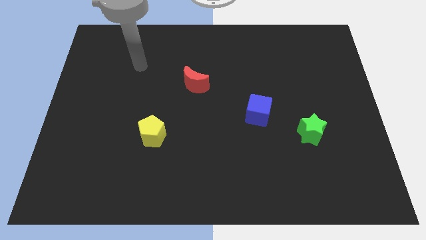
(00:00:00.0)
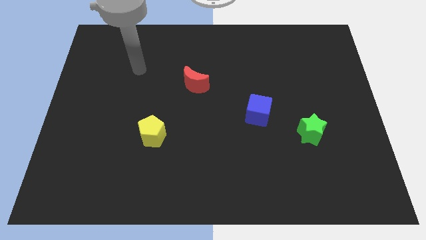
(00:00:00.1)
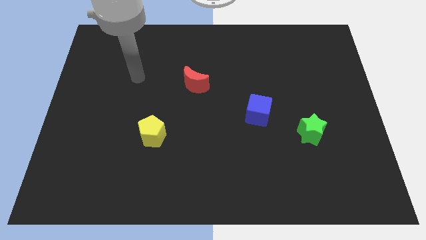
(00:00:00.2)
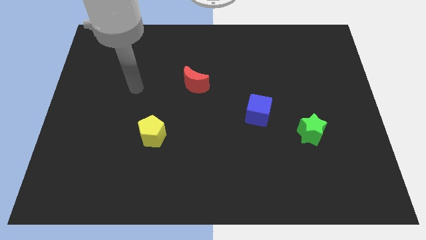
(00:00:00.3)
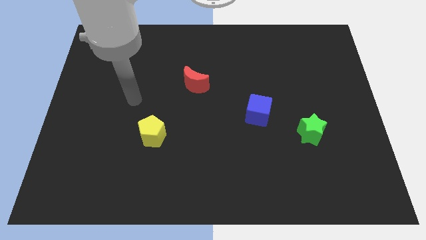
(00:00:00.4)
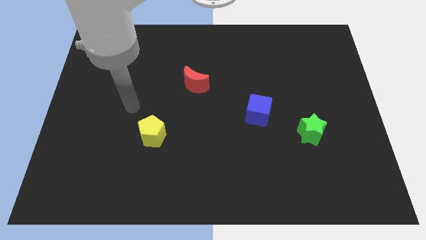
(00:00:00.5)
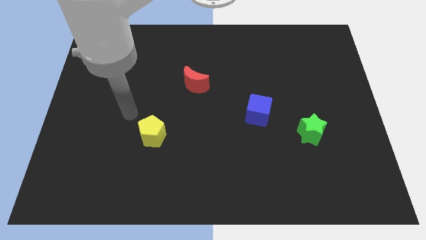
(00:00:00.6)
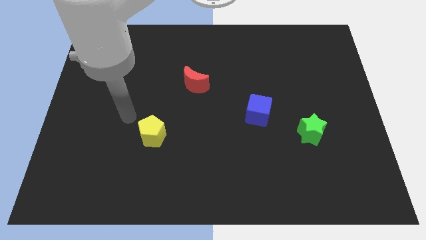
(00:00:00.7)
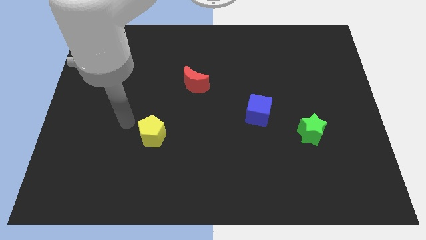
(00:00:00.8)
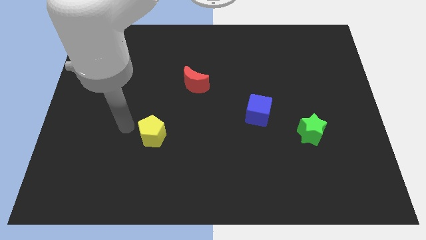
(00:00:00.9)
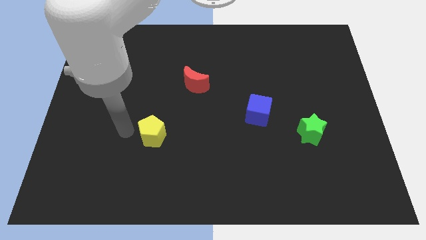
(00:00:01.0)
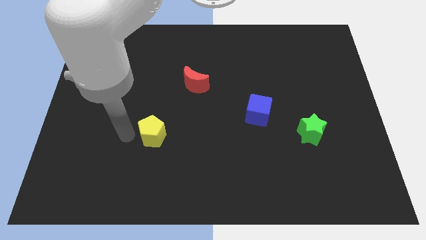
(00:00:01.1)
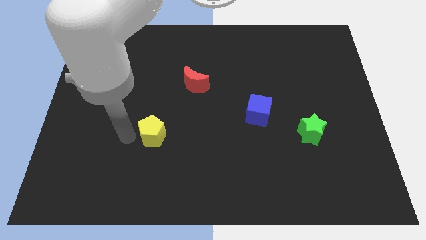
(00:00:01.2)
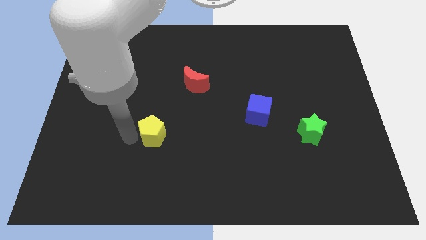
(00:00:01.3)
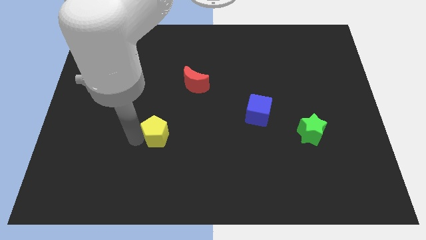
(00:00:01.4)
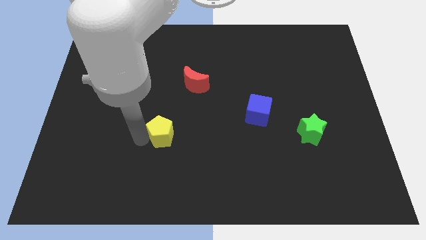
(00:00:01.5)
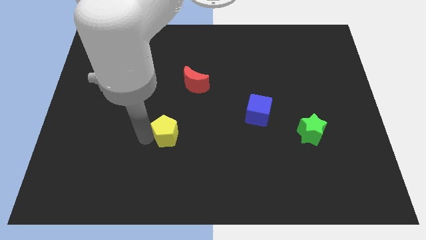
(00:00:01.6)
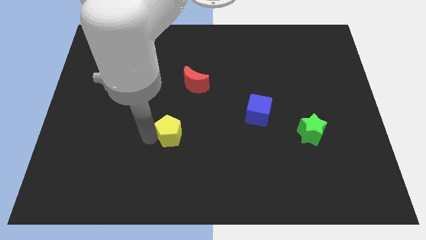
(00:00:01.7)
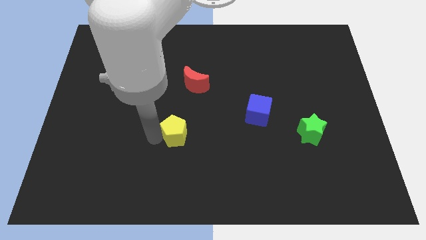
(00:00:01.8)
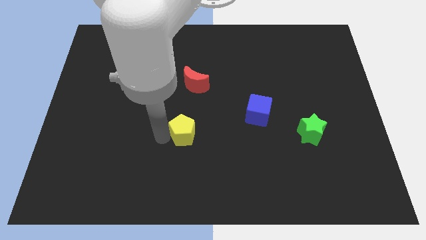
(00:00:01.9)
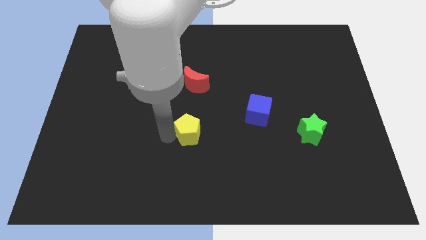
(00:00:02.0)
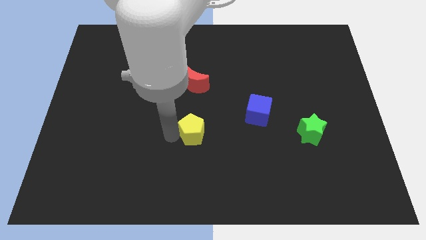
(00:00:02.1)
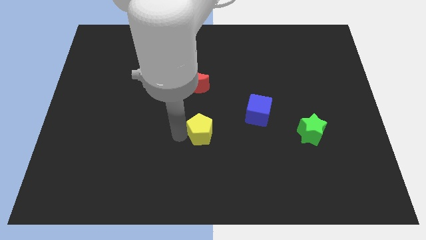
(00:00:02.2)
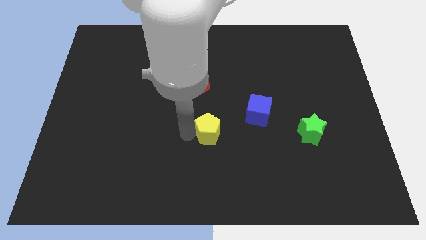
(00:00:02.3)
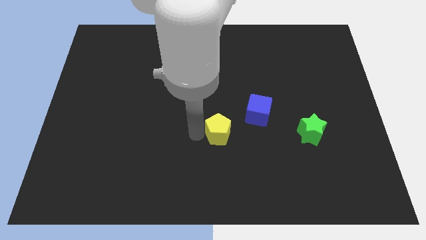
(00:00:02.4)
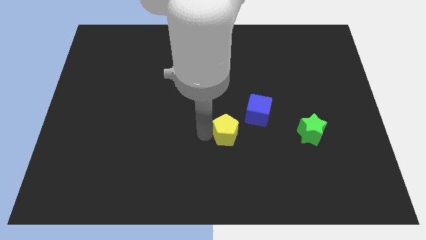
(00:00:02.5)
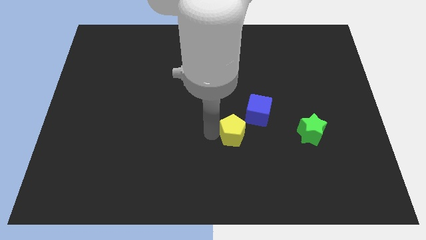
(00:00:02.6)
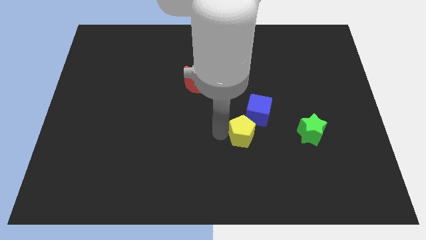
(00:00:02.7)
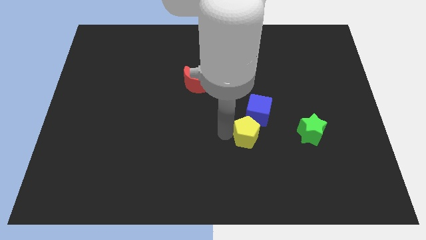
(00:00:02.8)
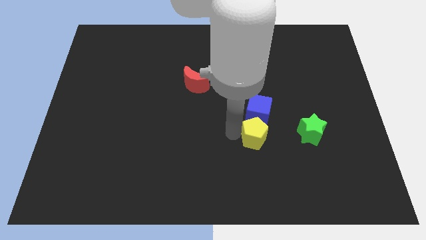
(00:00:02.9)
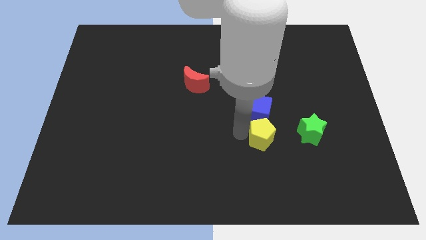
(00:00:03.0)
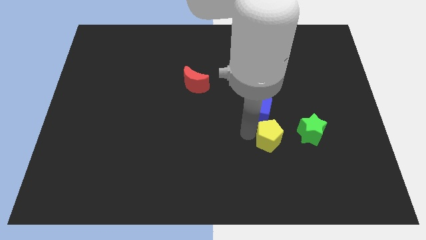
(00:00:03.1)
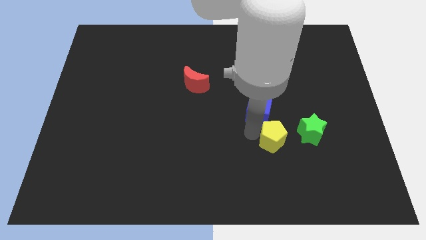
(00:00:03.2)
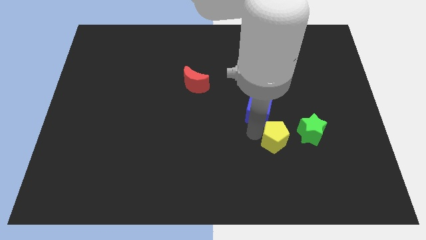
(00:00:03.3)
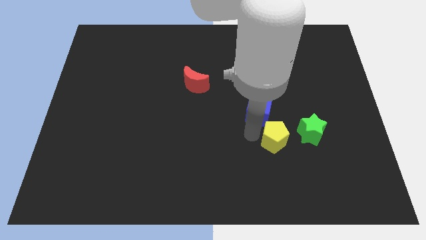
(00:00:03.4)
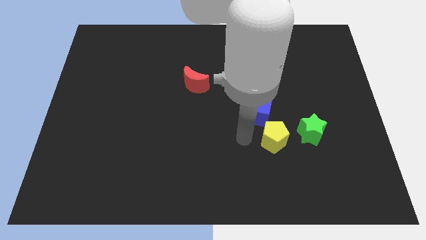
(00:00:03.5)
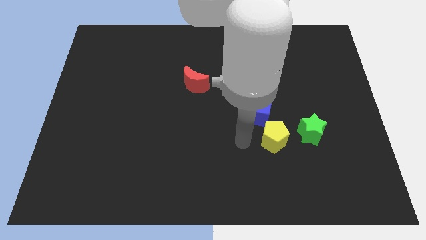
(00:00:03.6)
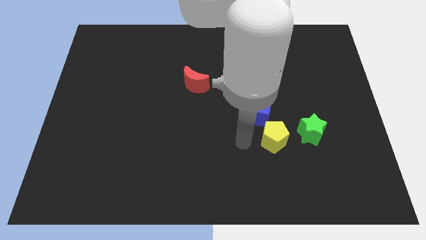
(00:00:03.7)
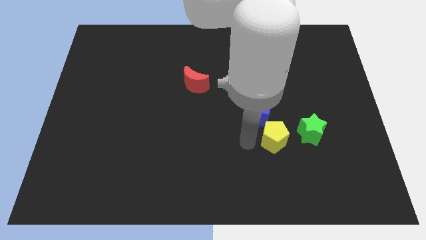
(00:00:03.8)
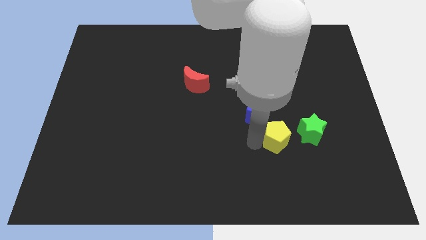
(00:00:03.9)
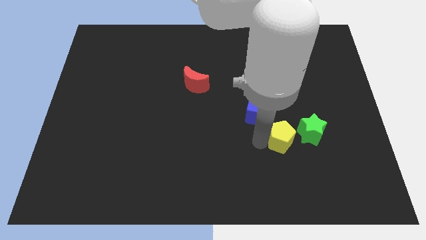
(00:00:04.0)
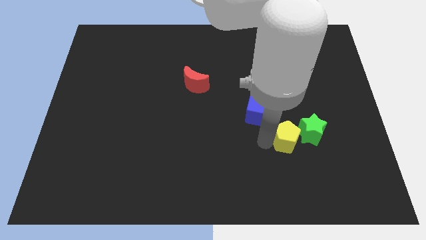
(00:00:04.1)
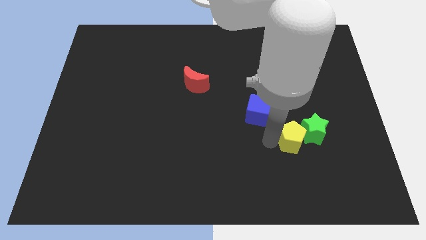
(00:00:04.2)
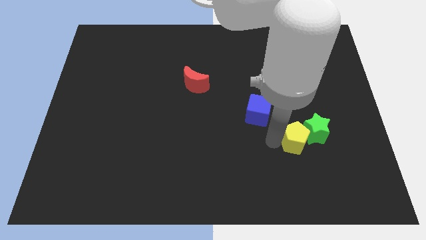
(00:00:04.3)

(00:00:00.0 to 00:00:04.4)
move the yellow block to the green star

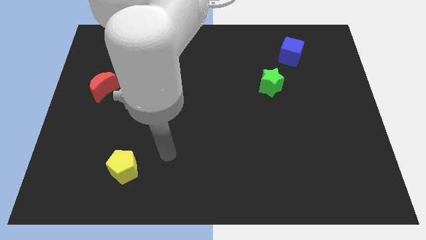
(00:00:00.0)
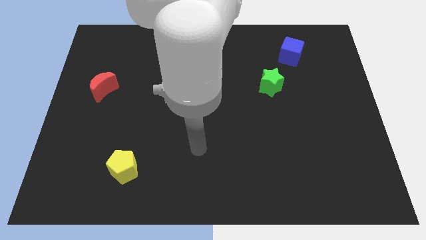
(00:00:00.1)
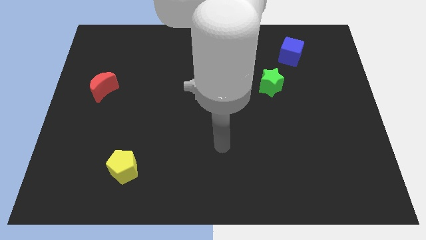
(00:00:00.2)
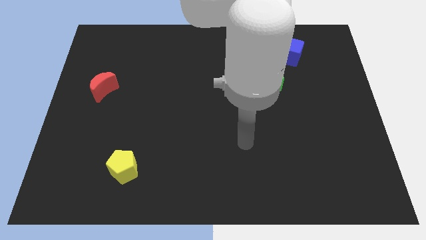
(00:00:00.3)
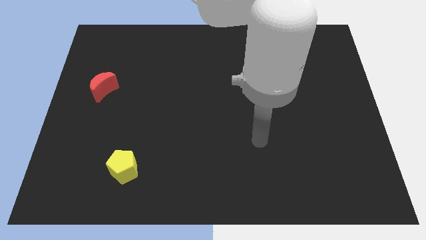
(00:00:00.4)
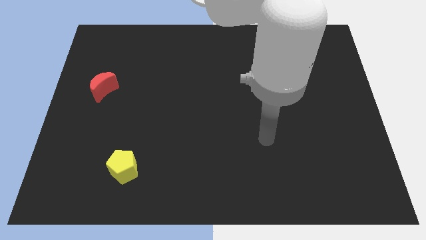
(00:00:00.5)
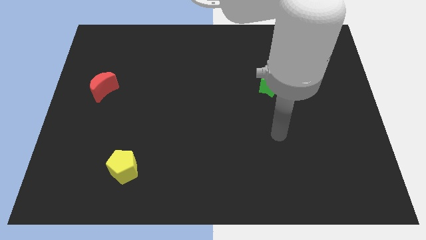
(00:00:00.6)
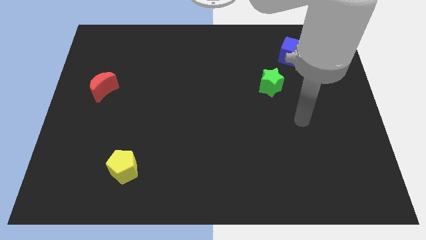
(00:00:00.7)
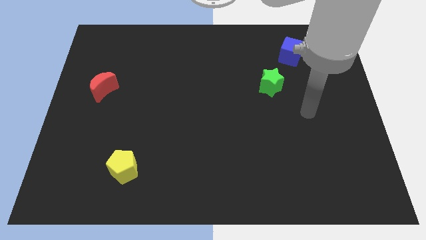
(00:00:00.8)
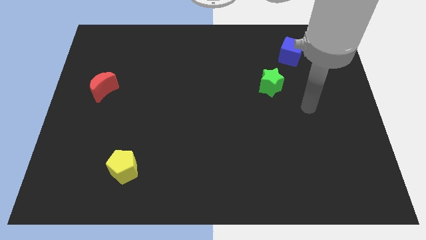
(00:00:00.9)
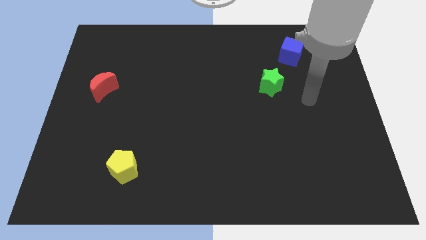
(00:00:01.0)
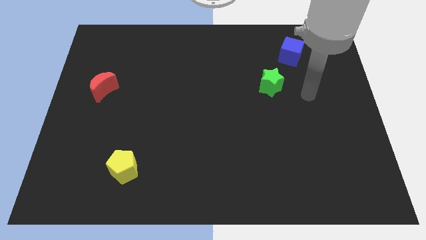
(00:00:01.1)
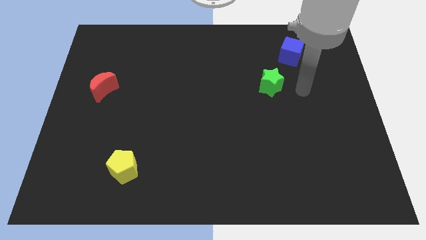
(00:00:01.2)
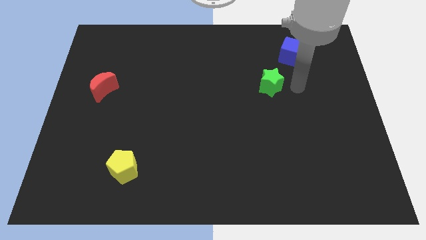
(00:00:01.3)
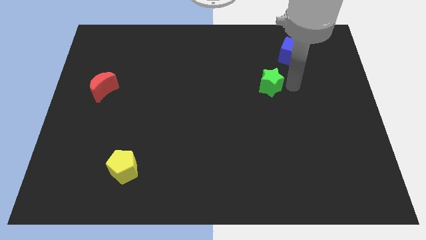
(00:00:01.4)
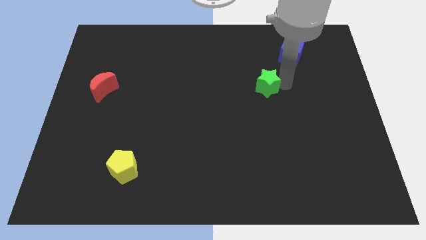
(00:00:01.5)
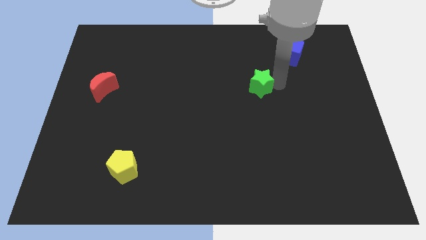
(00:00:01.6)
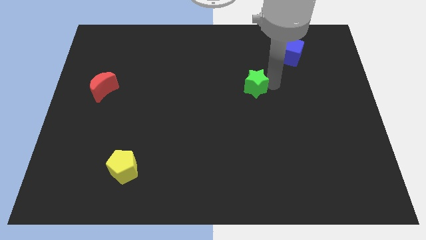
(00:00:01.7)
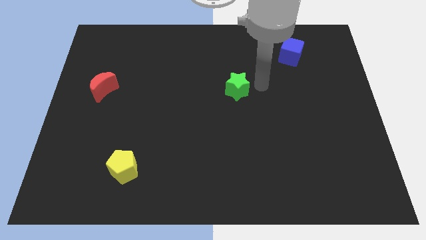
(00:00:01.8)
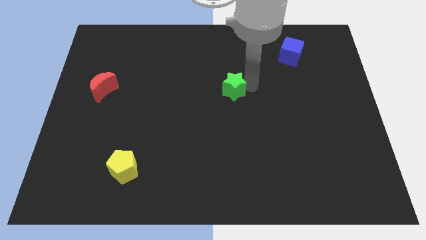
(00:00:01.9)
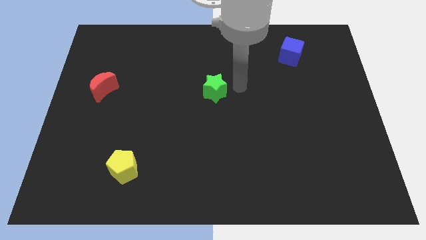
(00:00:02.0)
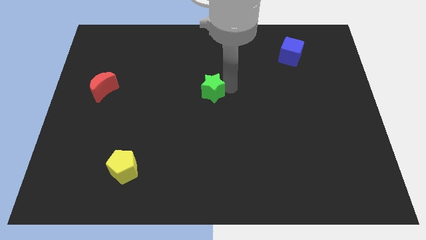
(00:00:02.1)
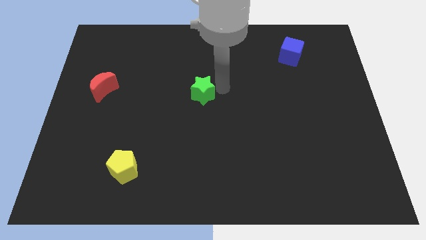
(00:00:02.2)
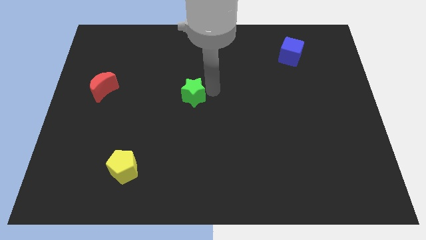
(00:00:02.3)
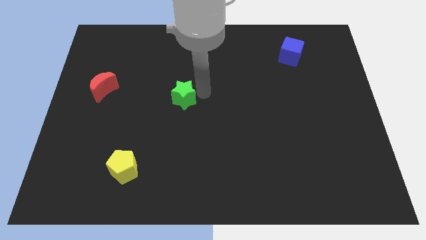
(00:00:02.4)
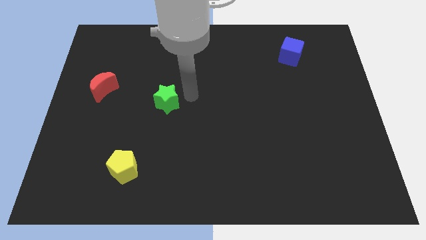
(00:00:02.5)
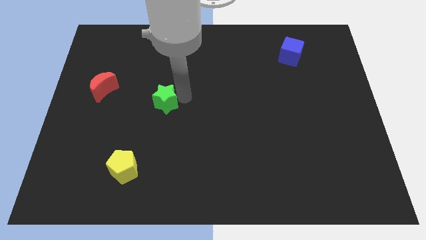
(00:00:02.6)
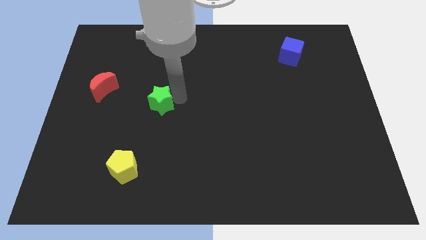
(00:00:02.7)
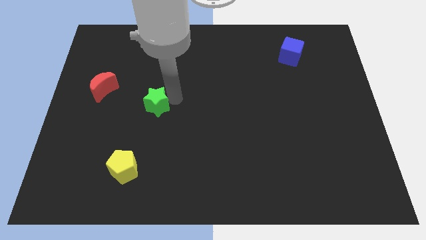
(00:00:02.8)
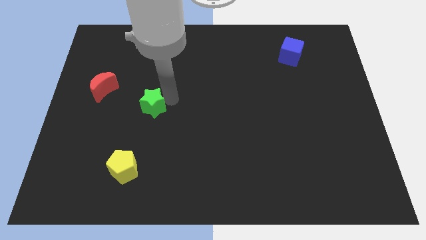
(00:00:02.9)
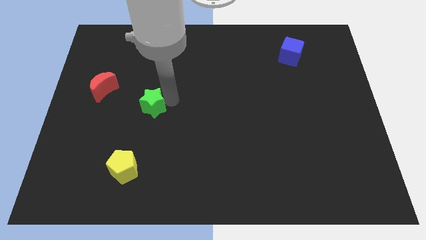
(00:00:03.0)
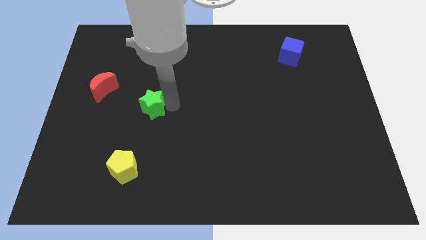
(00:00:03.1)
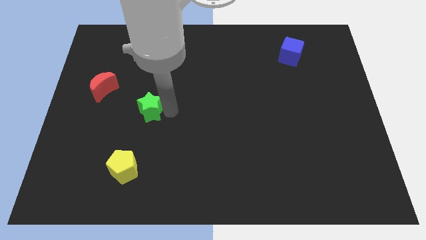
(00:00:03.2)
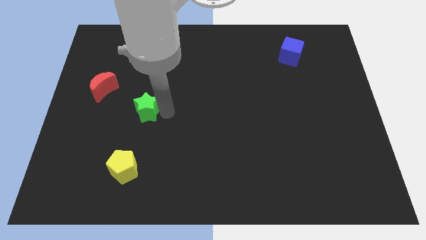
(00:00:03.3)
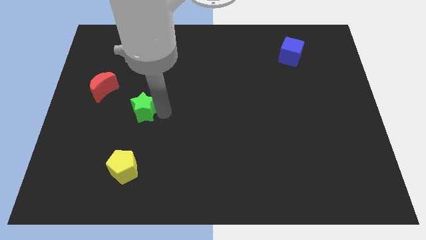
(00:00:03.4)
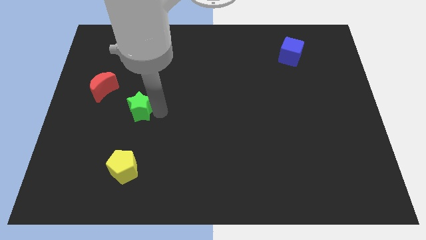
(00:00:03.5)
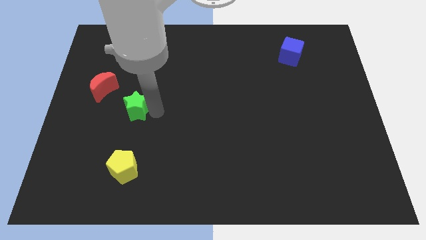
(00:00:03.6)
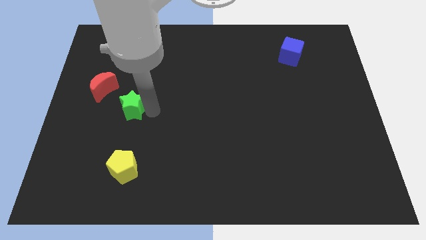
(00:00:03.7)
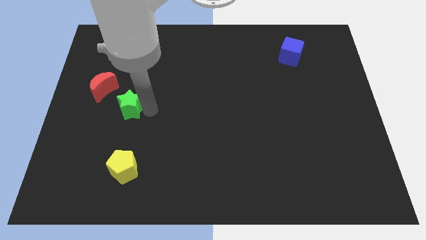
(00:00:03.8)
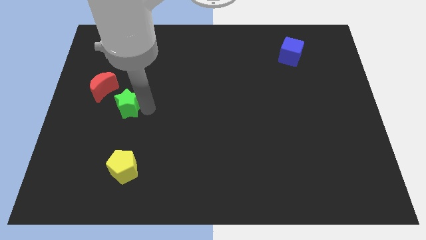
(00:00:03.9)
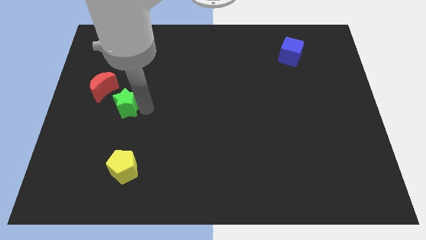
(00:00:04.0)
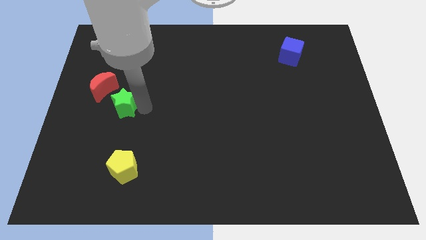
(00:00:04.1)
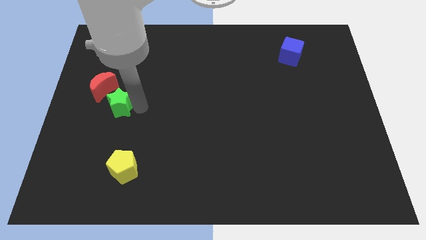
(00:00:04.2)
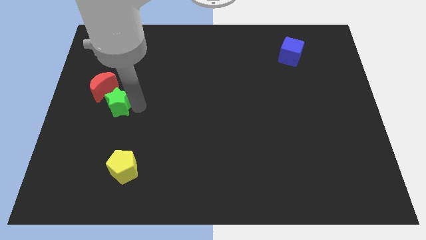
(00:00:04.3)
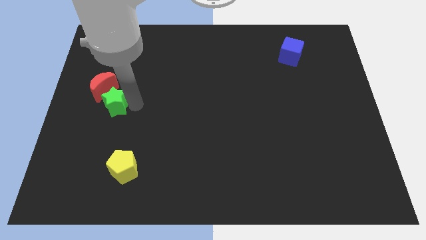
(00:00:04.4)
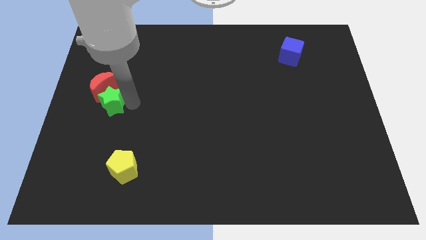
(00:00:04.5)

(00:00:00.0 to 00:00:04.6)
put the star close to the red block
